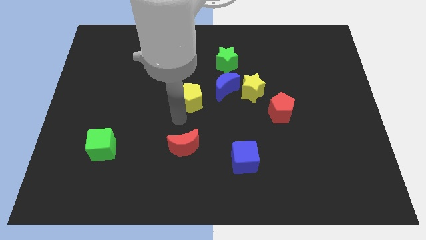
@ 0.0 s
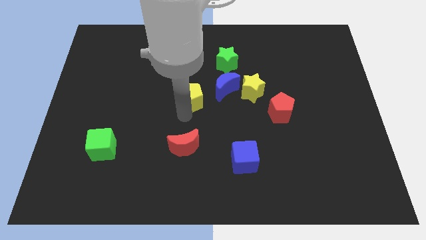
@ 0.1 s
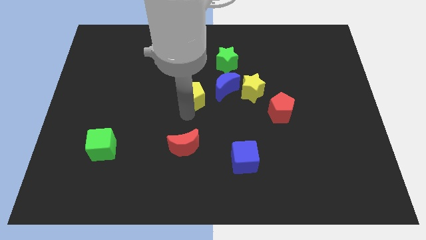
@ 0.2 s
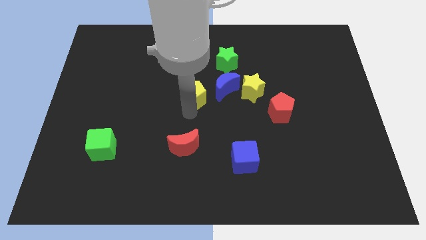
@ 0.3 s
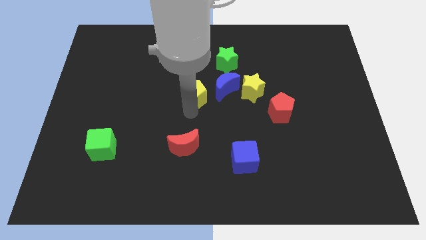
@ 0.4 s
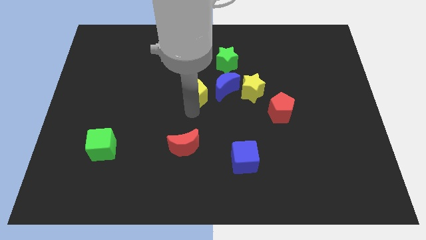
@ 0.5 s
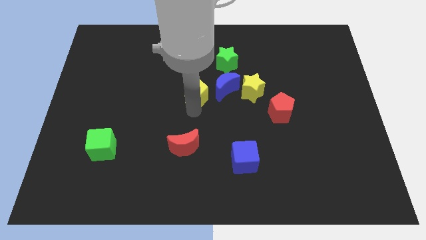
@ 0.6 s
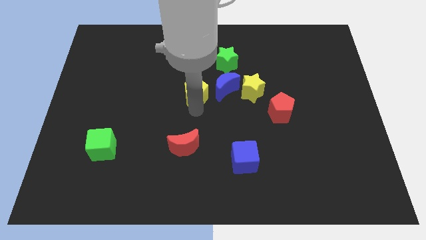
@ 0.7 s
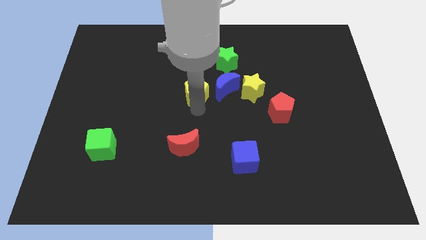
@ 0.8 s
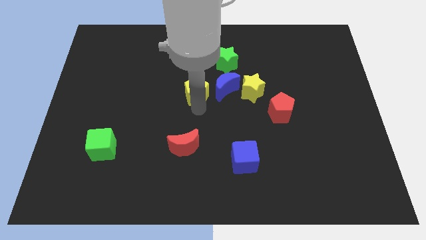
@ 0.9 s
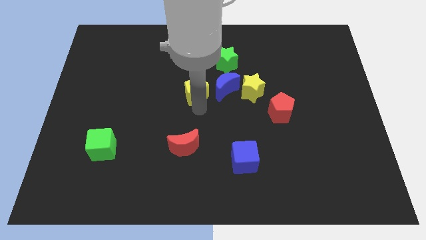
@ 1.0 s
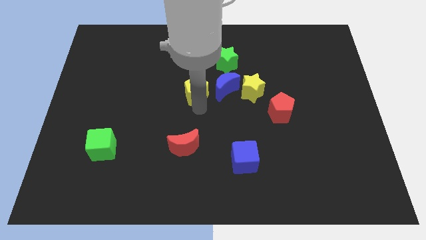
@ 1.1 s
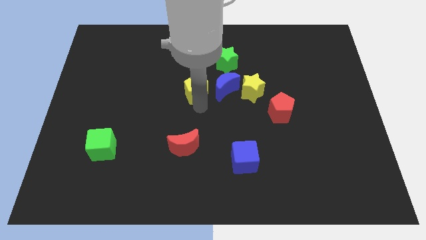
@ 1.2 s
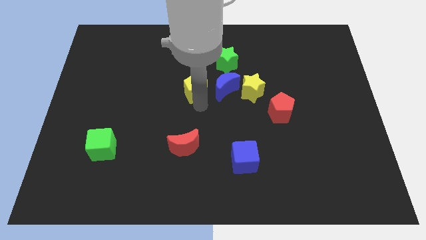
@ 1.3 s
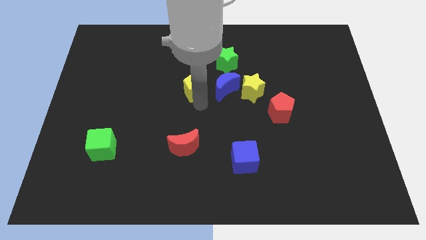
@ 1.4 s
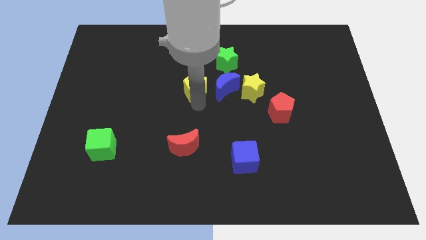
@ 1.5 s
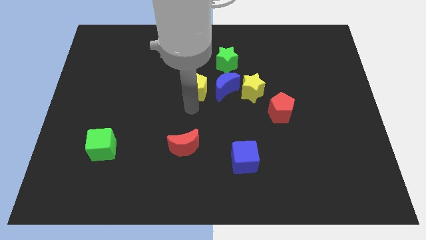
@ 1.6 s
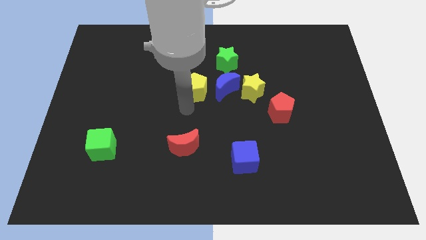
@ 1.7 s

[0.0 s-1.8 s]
push the yellow pentagon towards the left side of the blue crescent

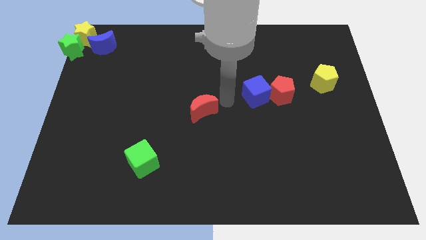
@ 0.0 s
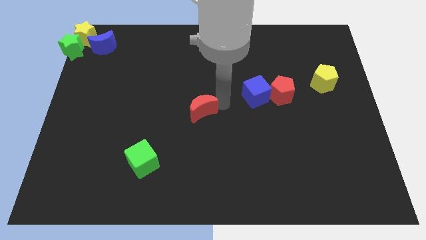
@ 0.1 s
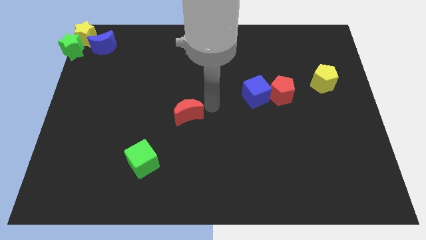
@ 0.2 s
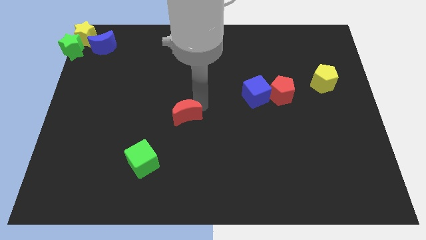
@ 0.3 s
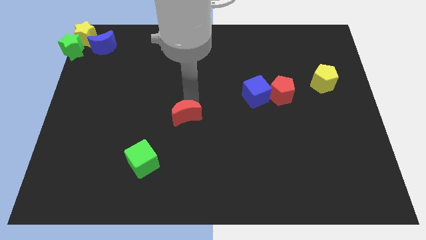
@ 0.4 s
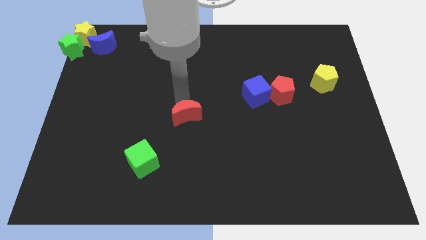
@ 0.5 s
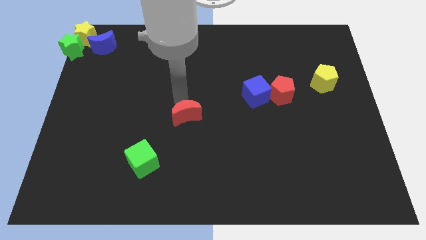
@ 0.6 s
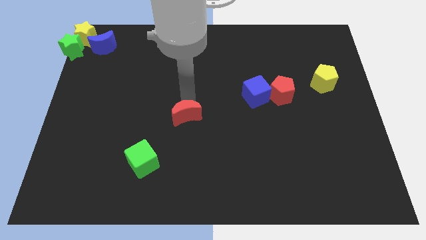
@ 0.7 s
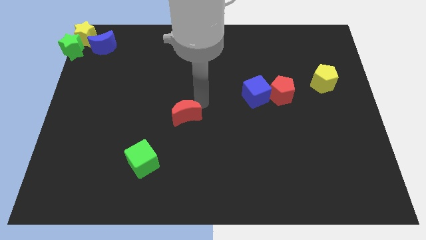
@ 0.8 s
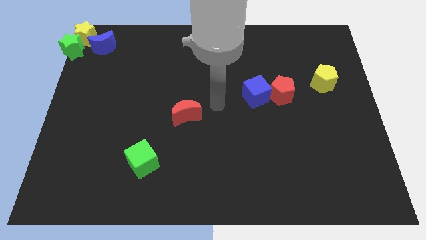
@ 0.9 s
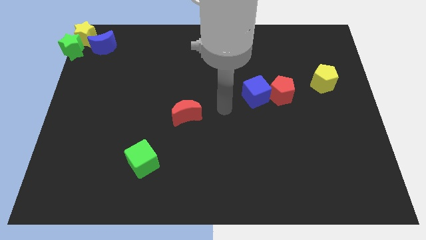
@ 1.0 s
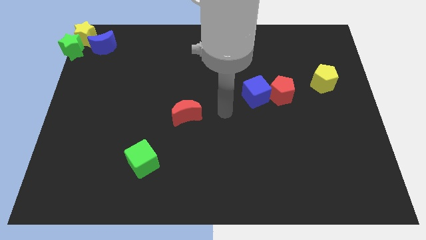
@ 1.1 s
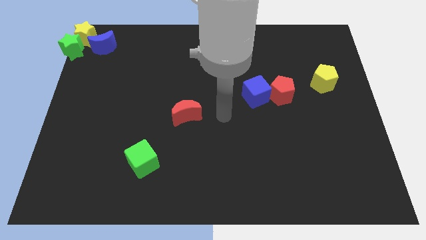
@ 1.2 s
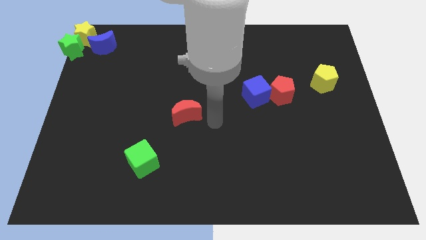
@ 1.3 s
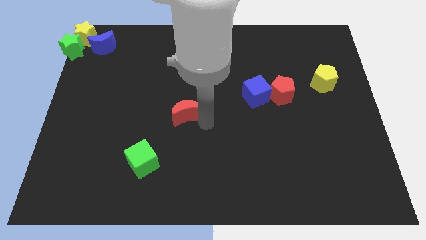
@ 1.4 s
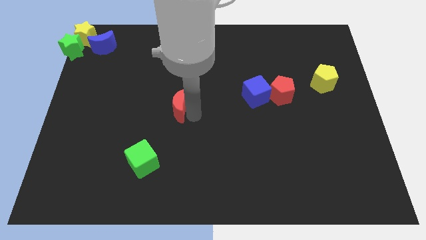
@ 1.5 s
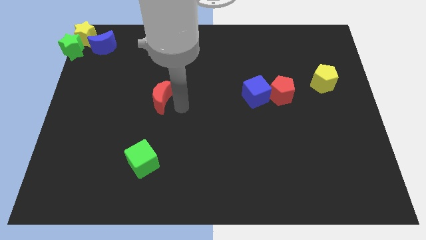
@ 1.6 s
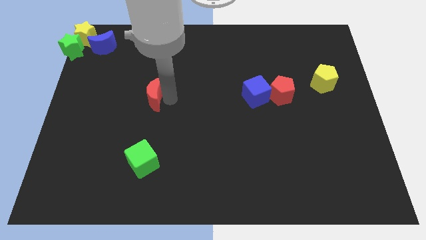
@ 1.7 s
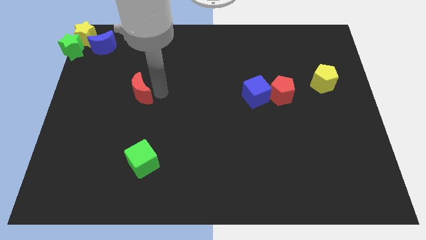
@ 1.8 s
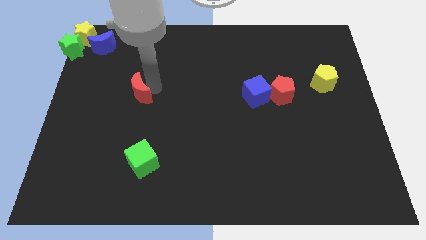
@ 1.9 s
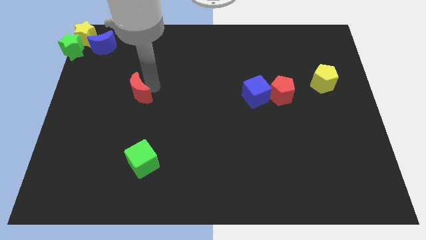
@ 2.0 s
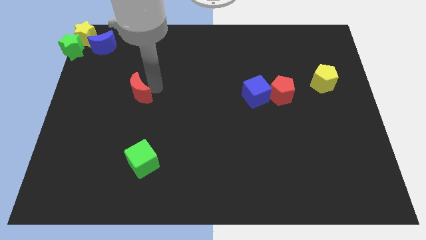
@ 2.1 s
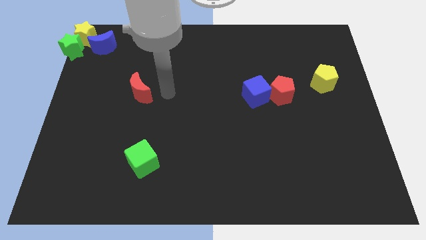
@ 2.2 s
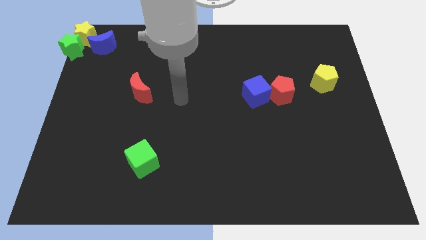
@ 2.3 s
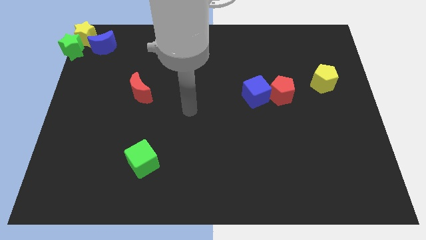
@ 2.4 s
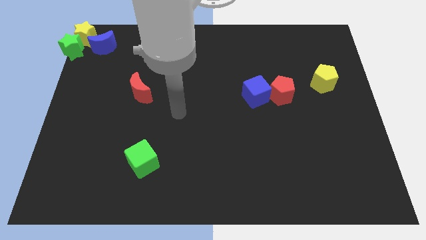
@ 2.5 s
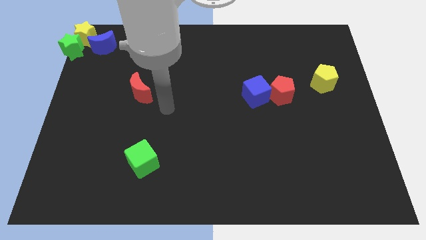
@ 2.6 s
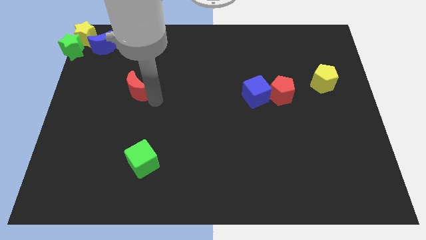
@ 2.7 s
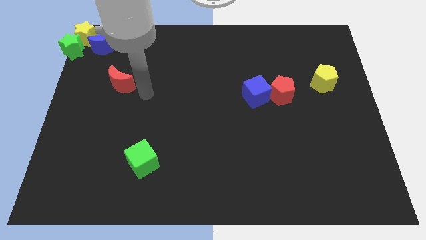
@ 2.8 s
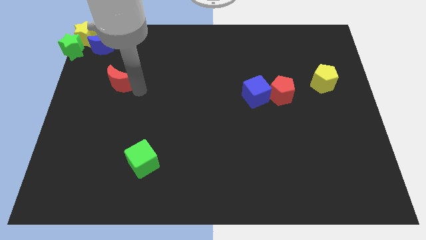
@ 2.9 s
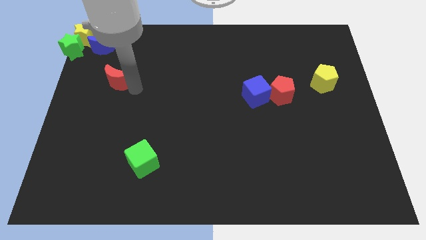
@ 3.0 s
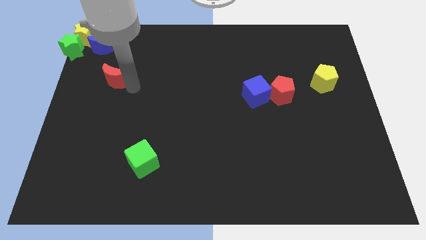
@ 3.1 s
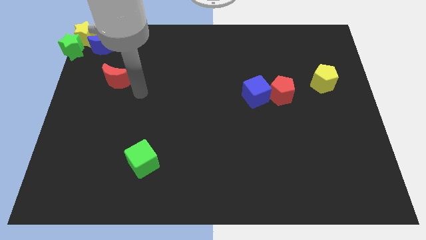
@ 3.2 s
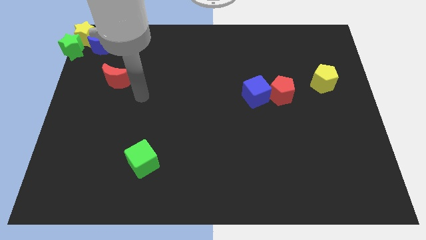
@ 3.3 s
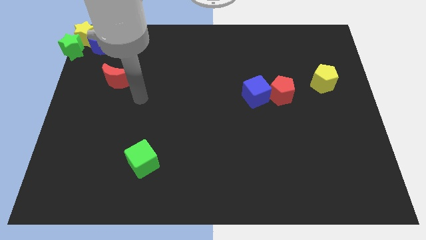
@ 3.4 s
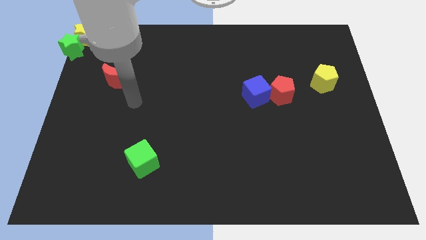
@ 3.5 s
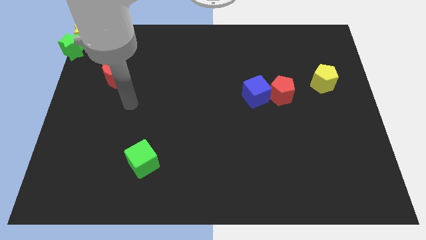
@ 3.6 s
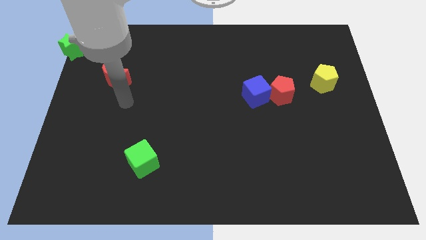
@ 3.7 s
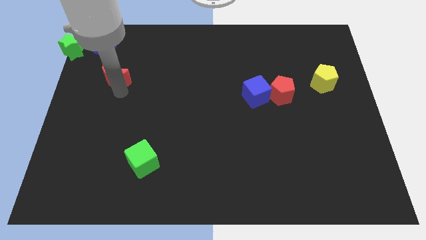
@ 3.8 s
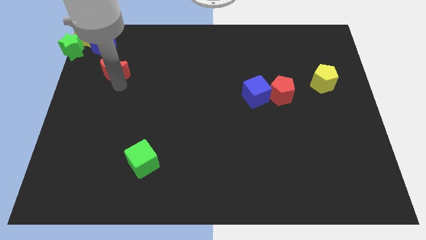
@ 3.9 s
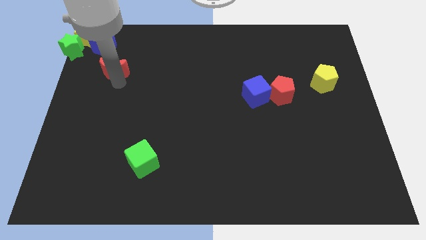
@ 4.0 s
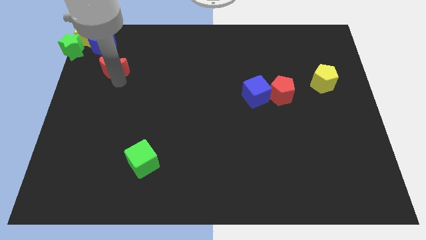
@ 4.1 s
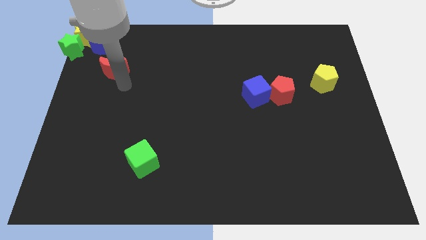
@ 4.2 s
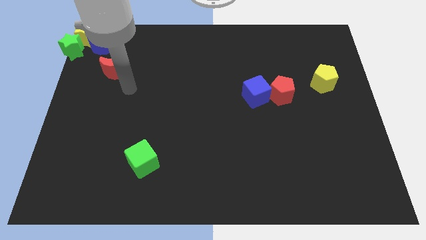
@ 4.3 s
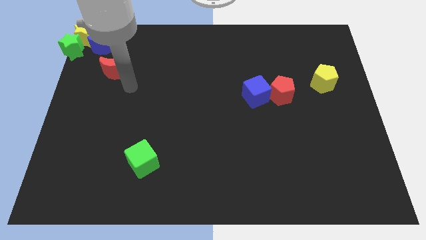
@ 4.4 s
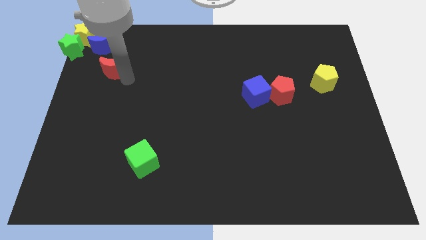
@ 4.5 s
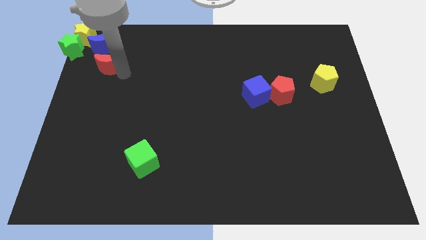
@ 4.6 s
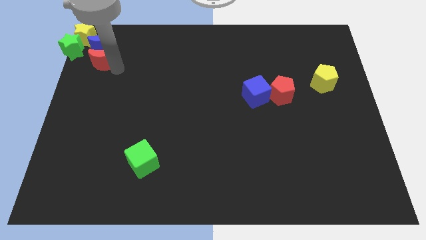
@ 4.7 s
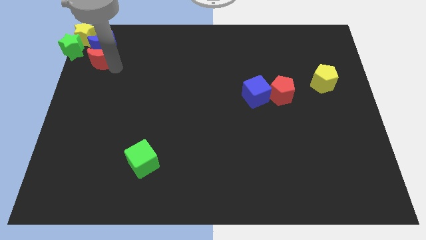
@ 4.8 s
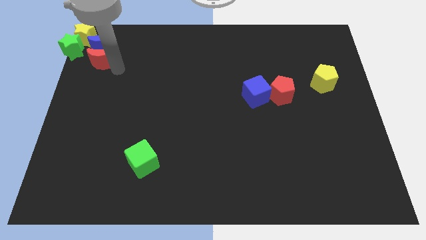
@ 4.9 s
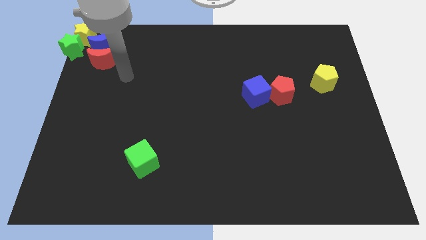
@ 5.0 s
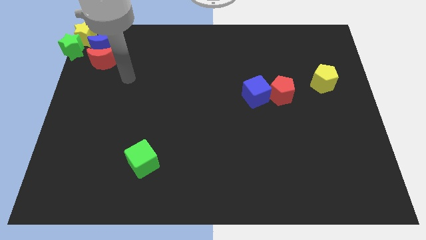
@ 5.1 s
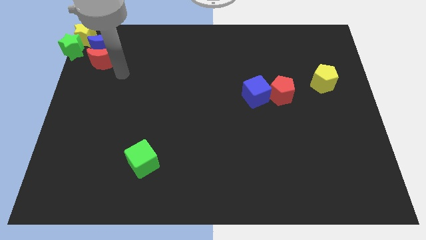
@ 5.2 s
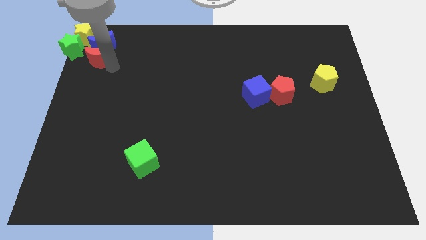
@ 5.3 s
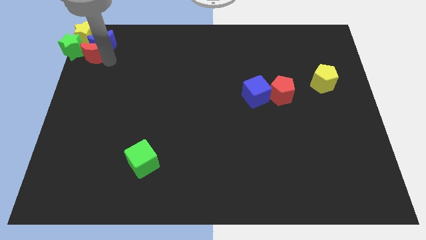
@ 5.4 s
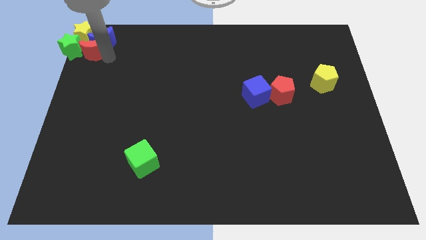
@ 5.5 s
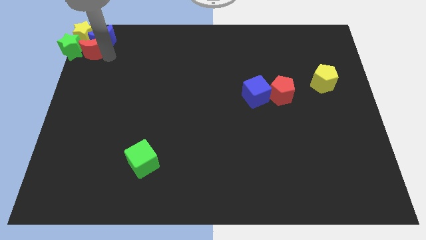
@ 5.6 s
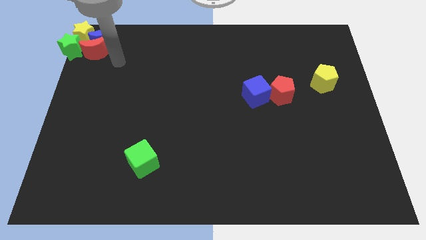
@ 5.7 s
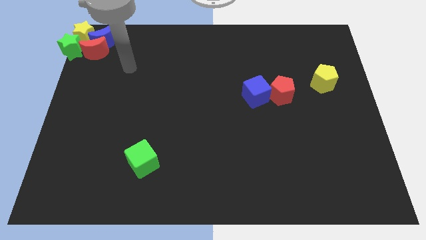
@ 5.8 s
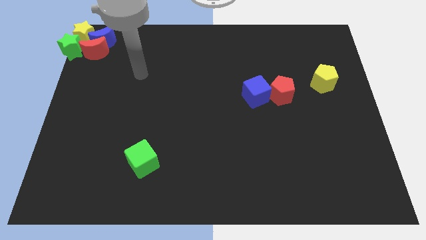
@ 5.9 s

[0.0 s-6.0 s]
push the red crescent into the group of blocks

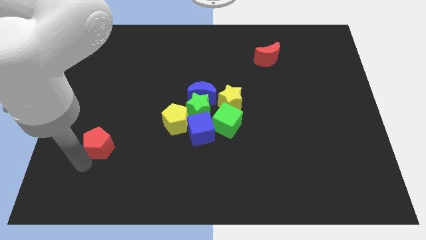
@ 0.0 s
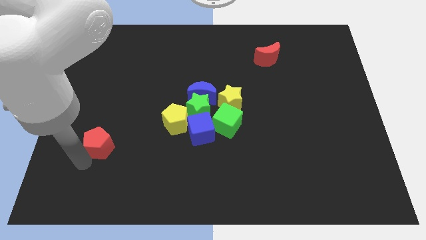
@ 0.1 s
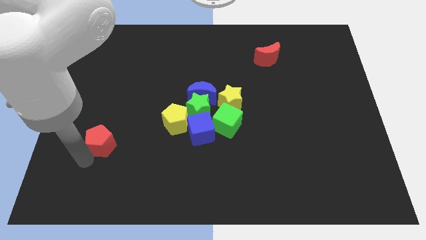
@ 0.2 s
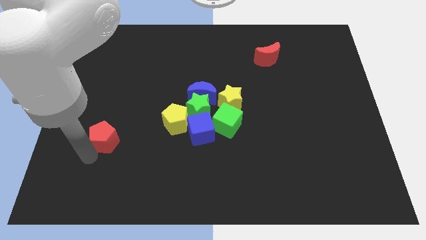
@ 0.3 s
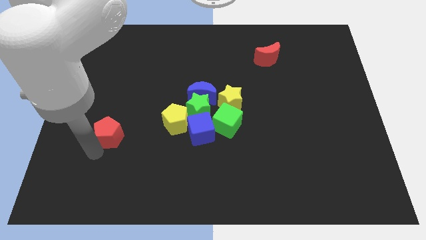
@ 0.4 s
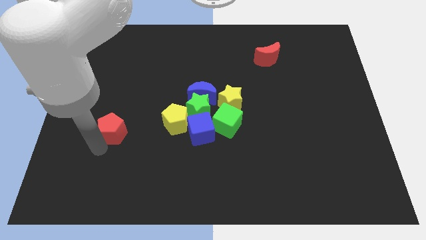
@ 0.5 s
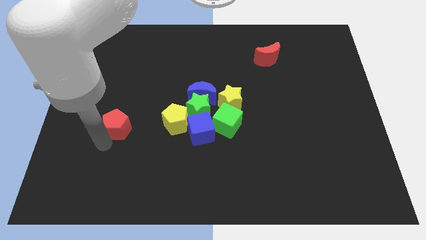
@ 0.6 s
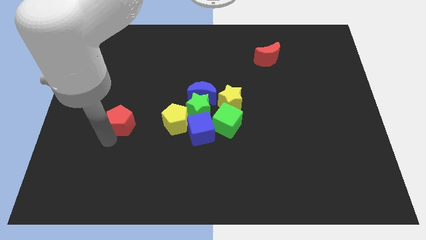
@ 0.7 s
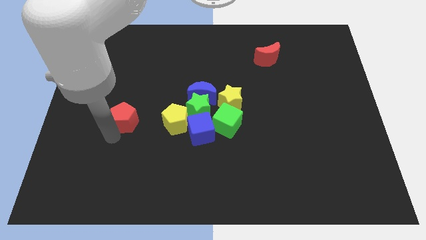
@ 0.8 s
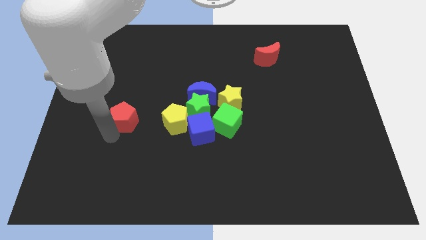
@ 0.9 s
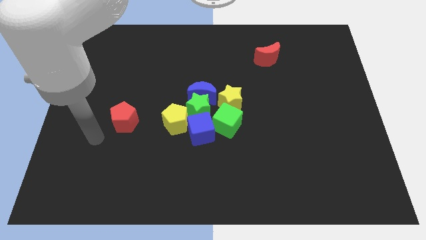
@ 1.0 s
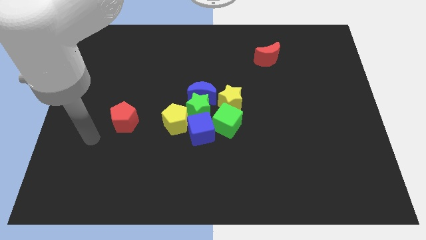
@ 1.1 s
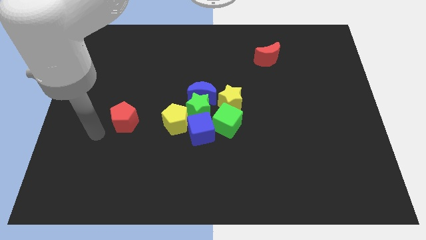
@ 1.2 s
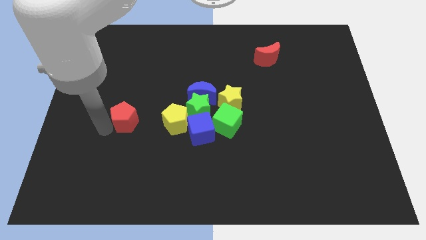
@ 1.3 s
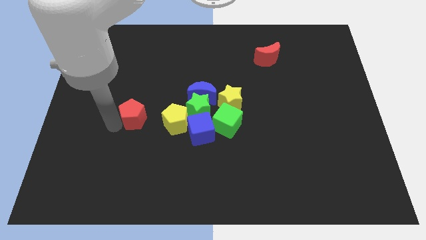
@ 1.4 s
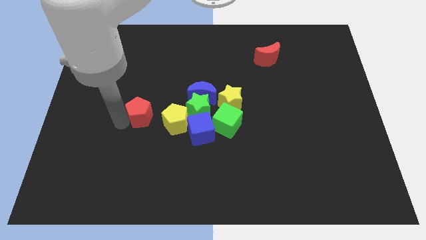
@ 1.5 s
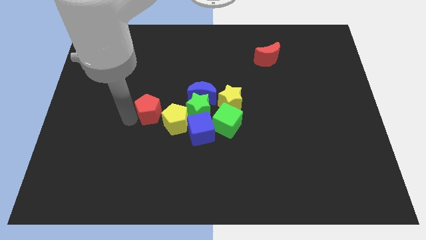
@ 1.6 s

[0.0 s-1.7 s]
push the red pentagon to the left of the yellow pentagon
